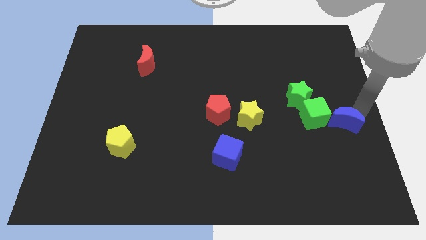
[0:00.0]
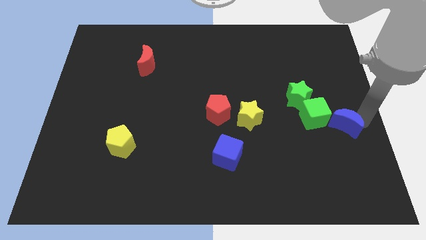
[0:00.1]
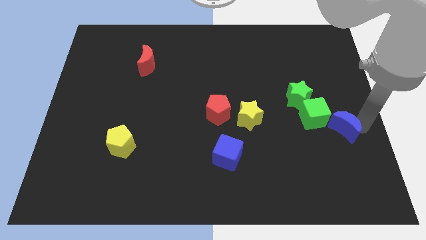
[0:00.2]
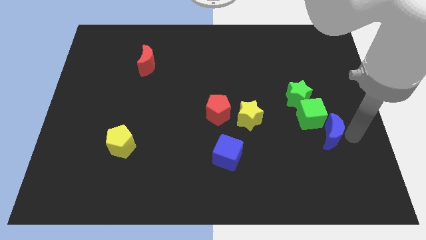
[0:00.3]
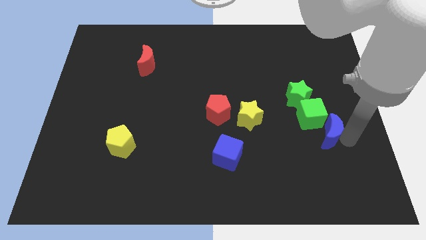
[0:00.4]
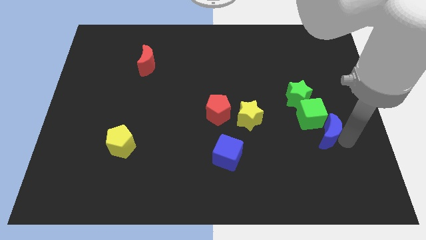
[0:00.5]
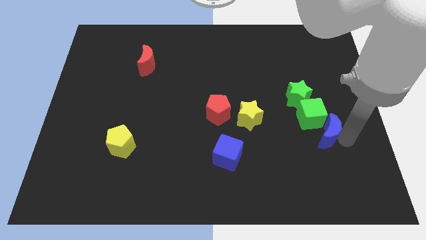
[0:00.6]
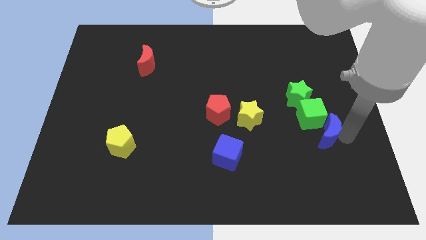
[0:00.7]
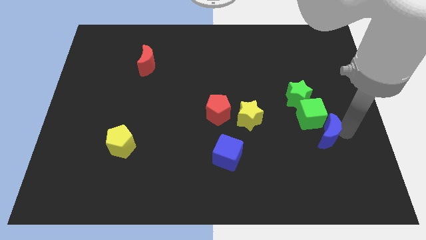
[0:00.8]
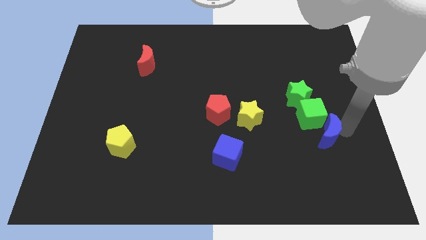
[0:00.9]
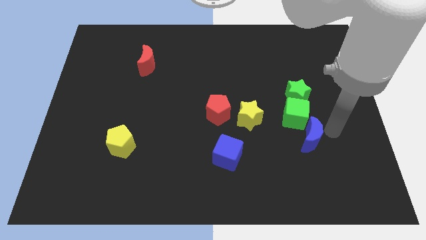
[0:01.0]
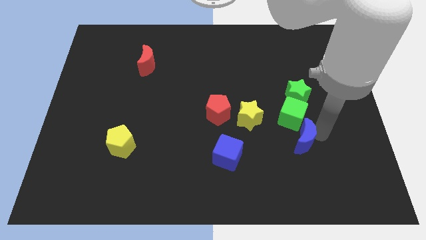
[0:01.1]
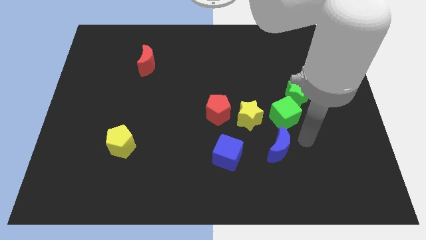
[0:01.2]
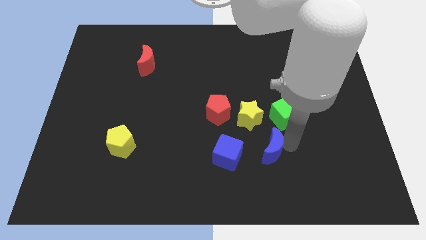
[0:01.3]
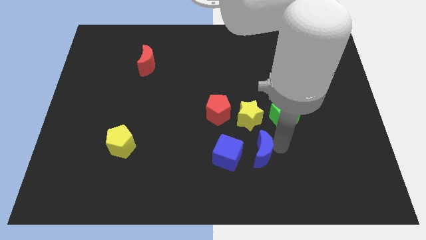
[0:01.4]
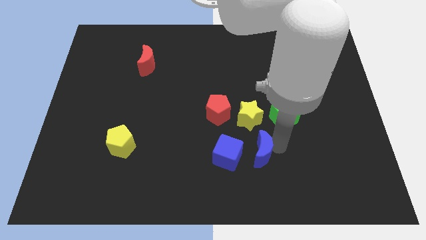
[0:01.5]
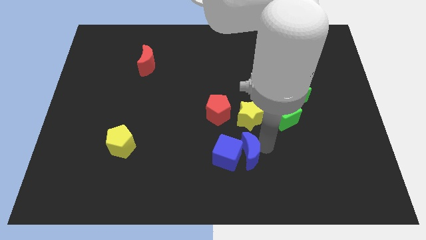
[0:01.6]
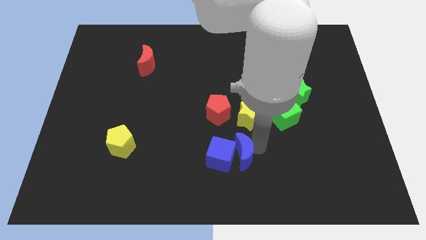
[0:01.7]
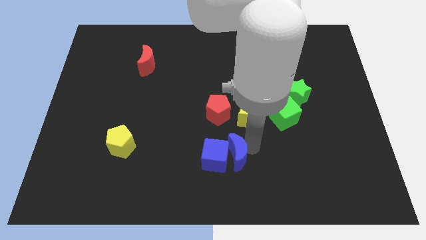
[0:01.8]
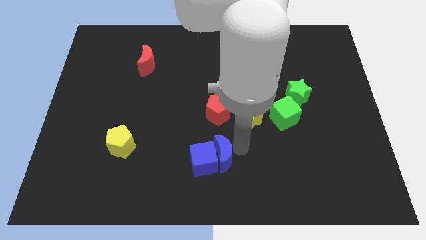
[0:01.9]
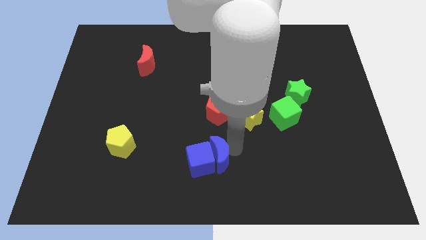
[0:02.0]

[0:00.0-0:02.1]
move the blue crescent into the blue cube

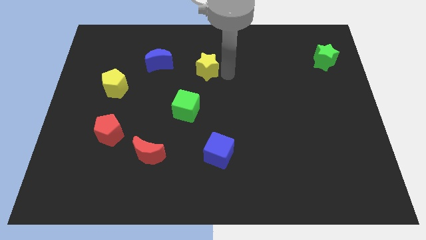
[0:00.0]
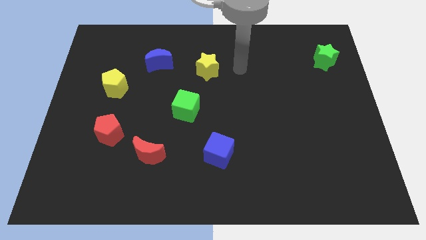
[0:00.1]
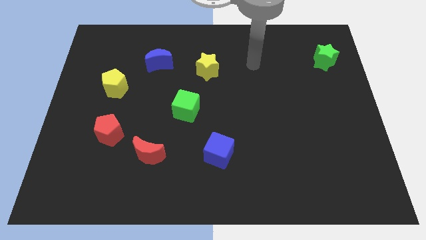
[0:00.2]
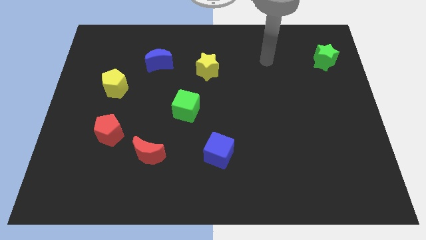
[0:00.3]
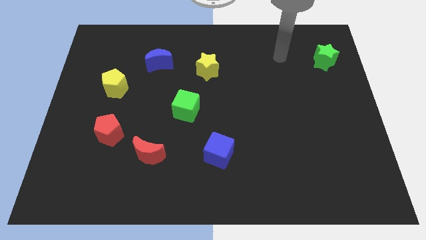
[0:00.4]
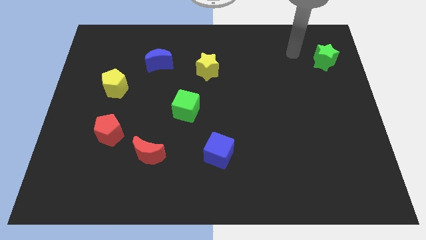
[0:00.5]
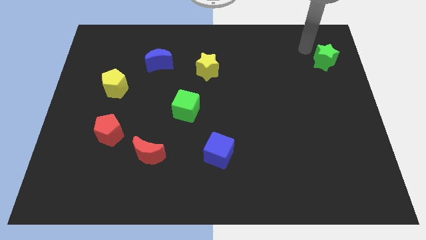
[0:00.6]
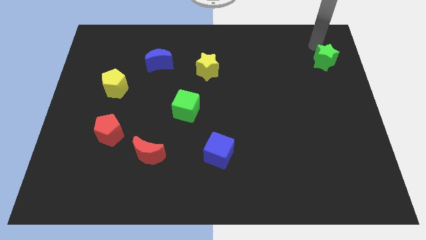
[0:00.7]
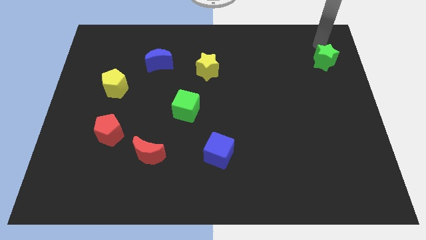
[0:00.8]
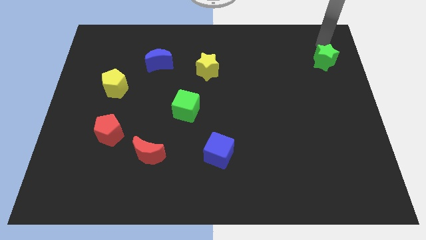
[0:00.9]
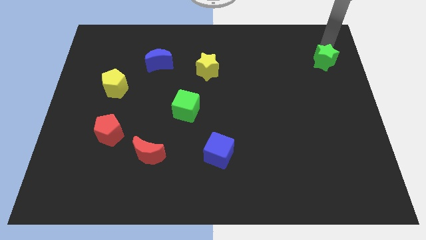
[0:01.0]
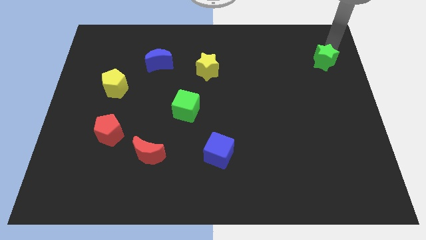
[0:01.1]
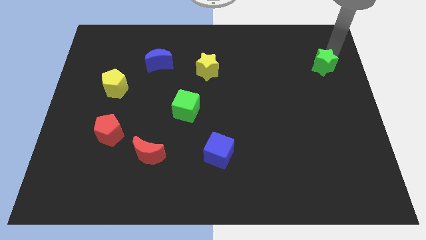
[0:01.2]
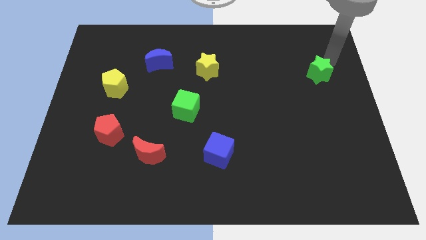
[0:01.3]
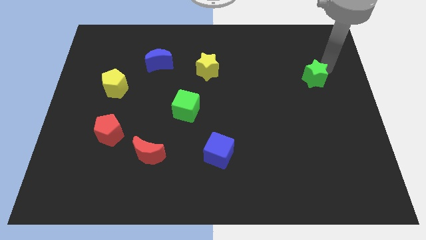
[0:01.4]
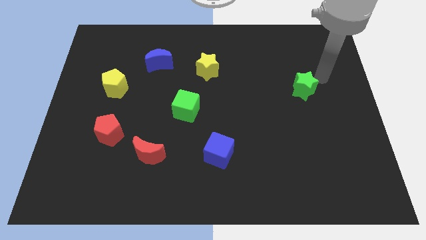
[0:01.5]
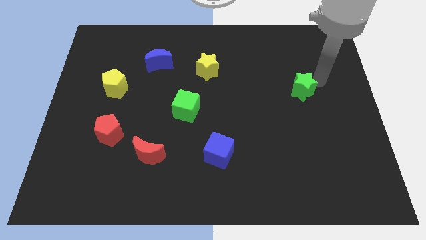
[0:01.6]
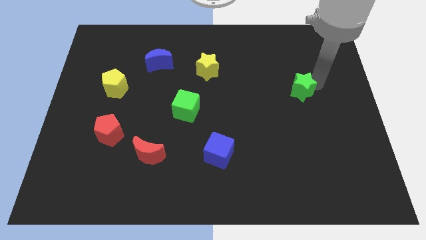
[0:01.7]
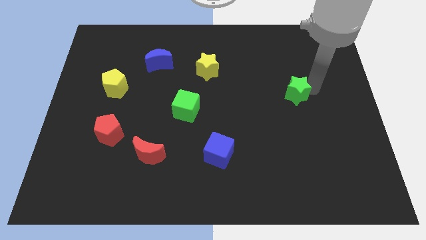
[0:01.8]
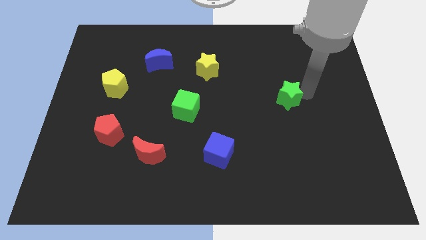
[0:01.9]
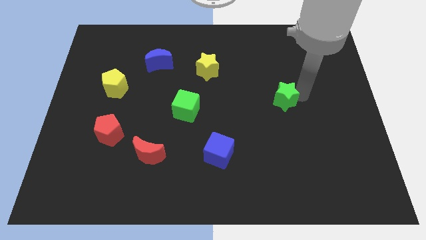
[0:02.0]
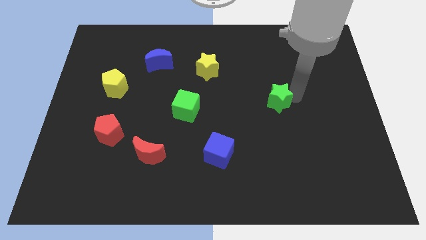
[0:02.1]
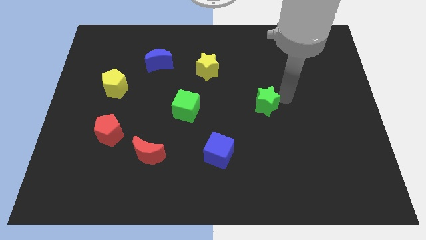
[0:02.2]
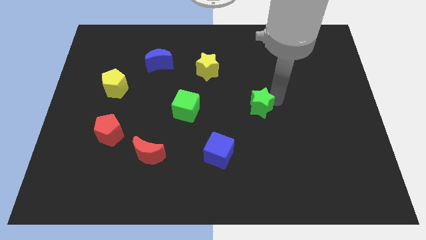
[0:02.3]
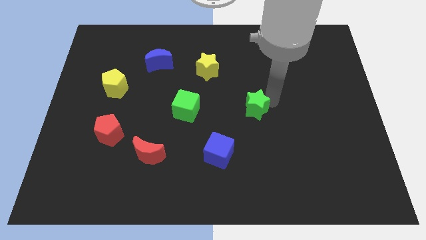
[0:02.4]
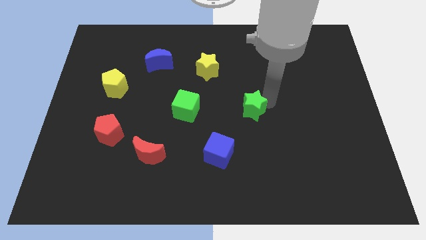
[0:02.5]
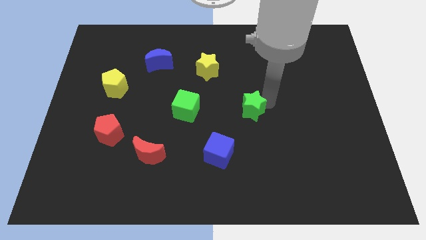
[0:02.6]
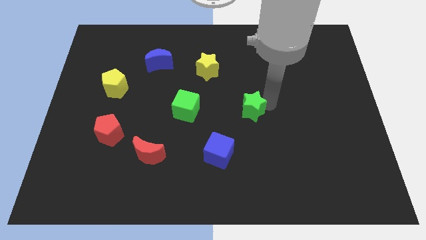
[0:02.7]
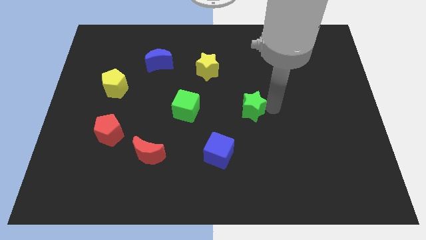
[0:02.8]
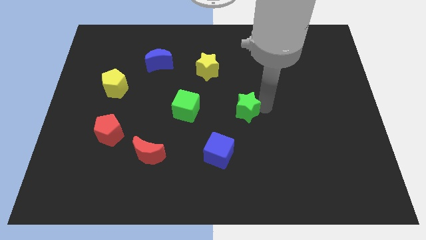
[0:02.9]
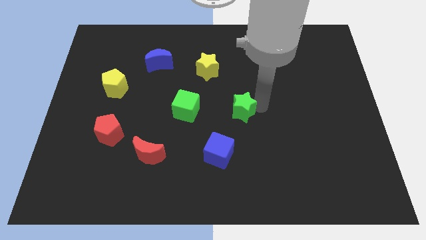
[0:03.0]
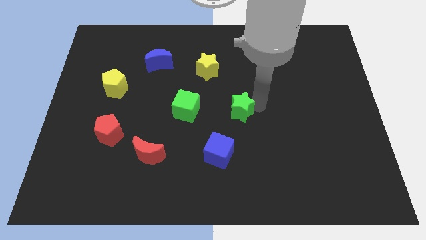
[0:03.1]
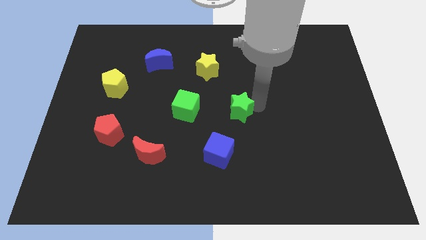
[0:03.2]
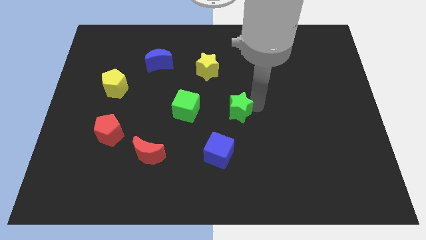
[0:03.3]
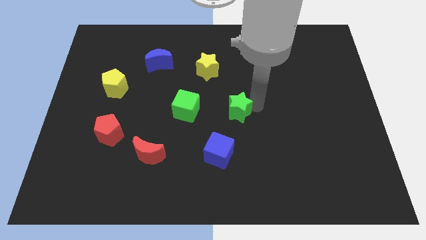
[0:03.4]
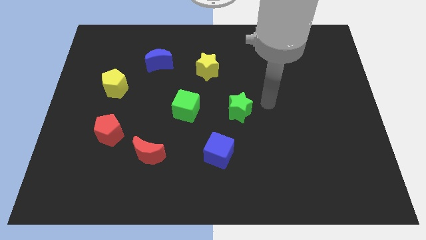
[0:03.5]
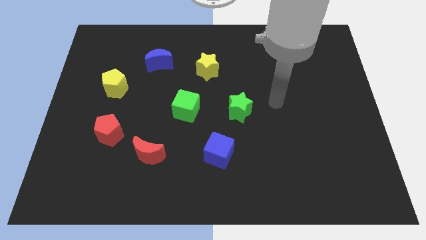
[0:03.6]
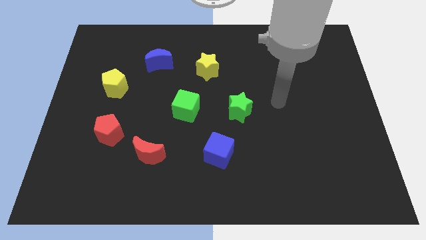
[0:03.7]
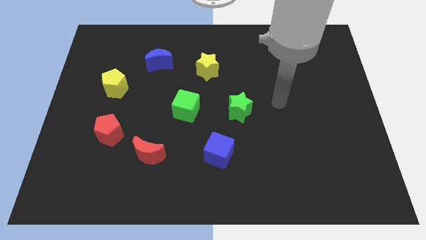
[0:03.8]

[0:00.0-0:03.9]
place the green star horizontally to the right side of the green cube

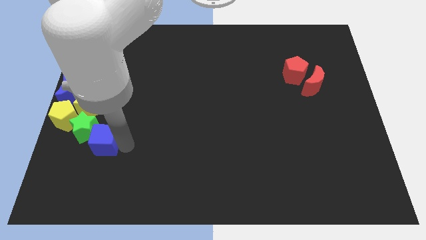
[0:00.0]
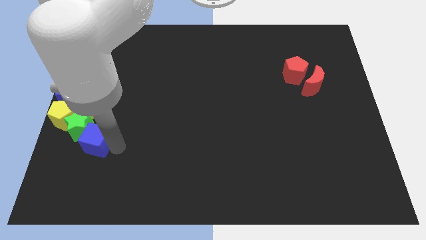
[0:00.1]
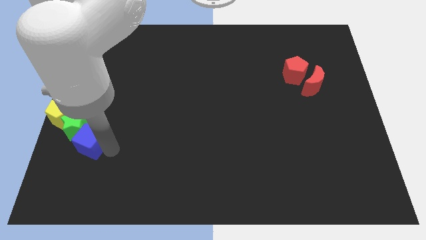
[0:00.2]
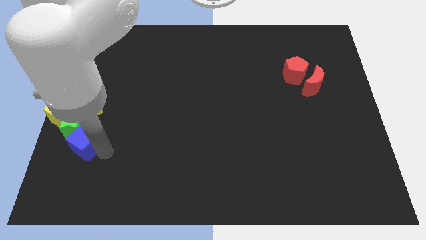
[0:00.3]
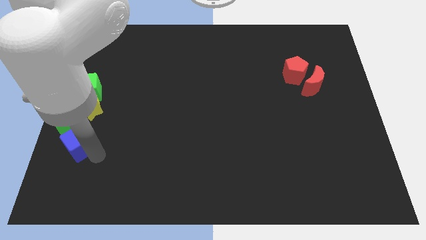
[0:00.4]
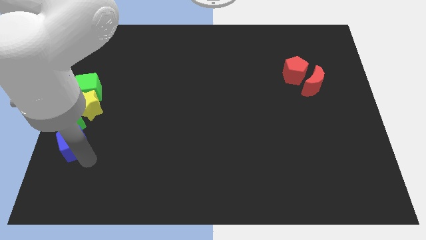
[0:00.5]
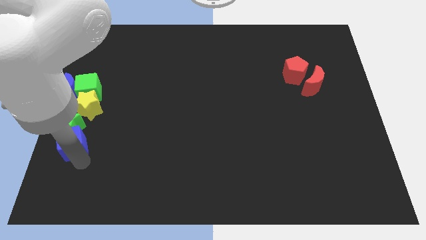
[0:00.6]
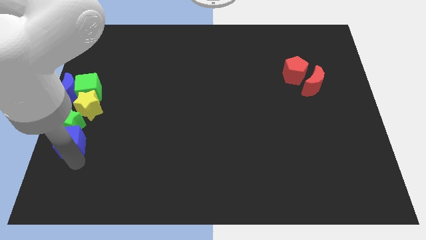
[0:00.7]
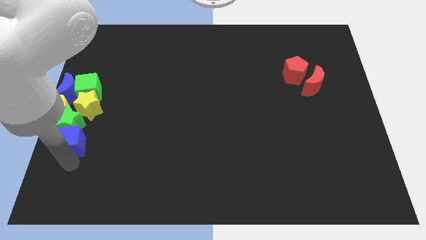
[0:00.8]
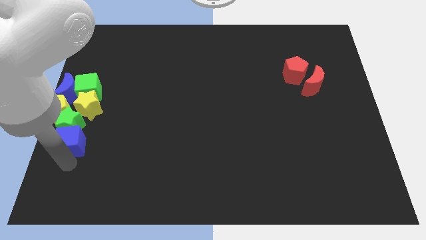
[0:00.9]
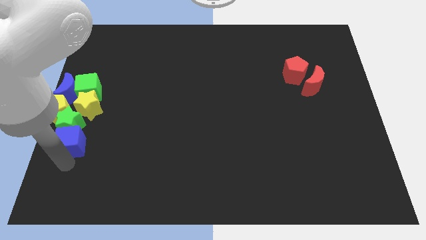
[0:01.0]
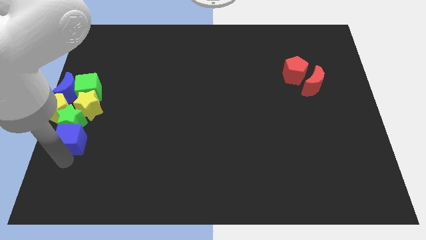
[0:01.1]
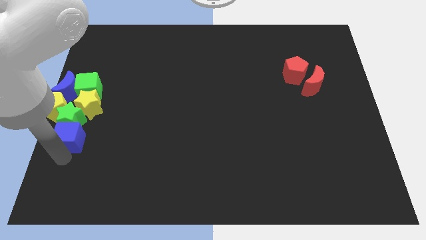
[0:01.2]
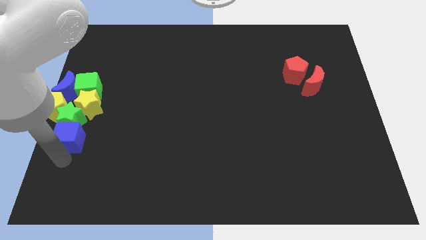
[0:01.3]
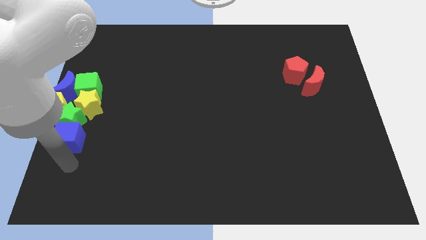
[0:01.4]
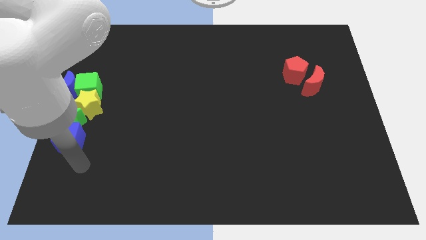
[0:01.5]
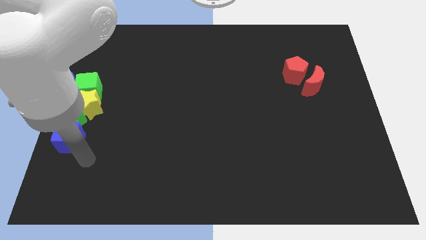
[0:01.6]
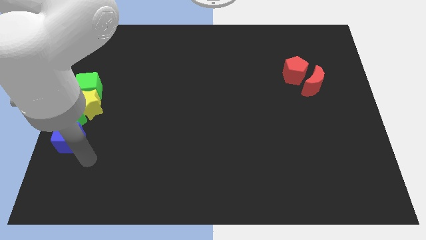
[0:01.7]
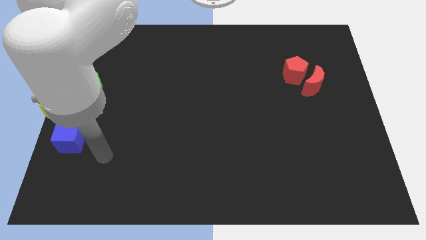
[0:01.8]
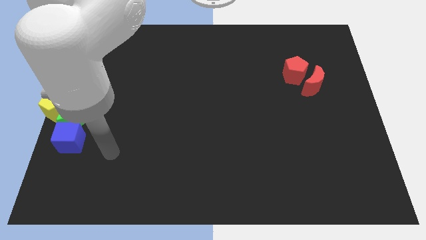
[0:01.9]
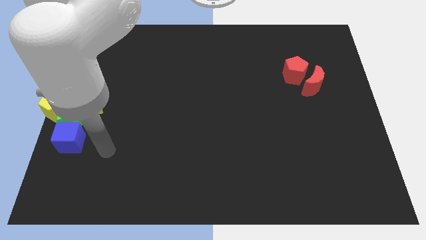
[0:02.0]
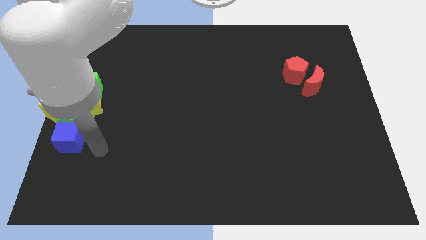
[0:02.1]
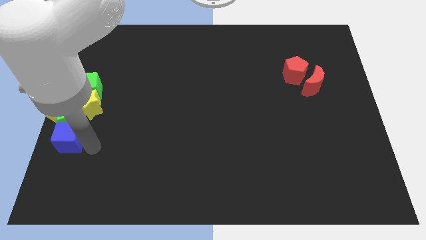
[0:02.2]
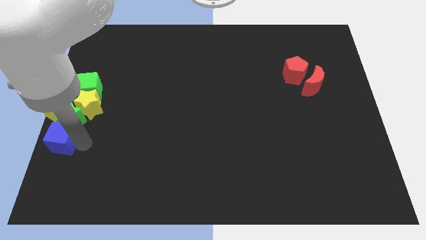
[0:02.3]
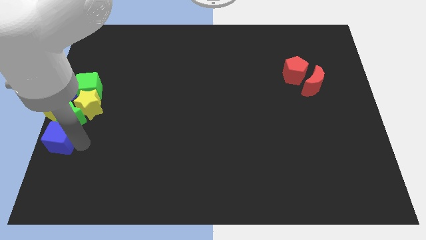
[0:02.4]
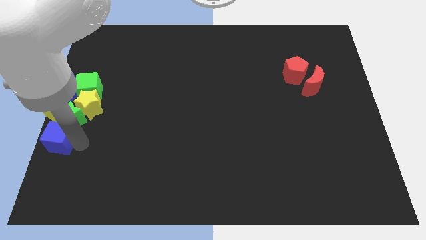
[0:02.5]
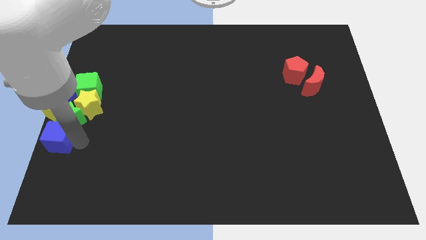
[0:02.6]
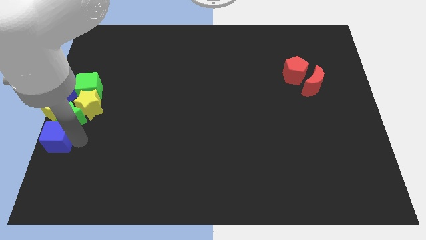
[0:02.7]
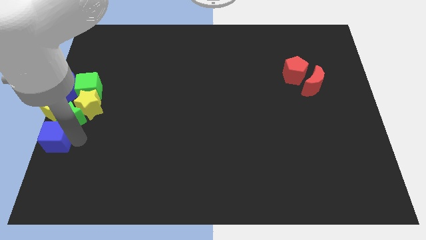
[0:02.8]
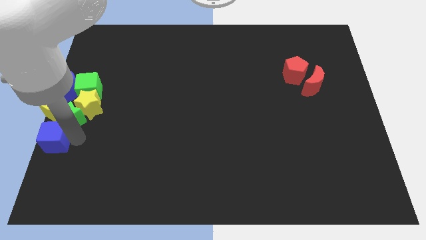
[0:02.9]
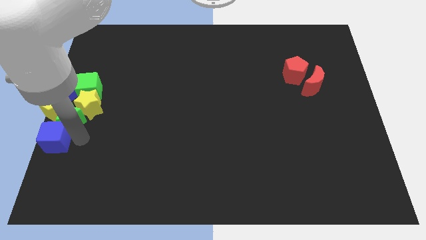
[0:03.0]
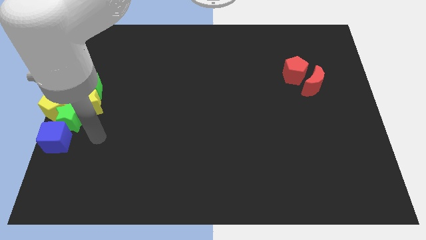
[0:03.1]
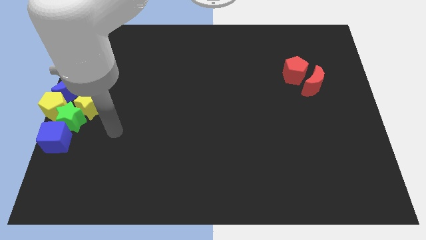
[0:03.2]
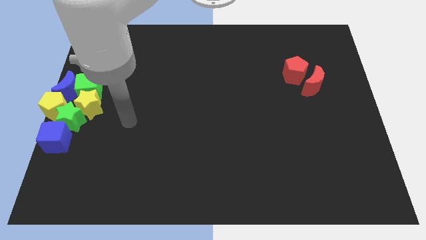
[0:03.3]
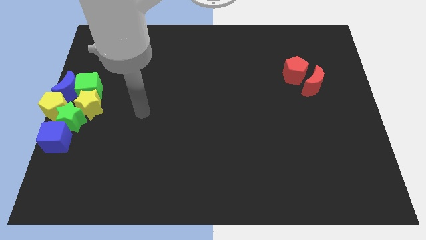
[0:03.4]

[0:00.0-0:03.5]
push the green star and blue cube into the yellow blocks
